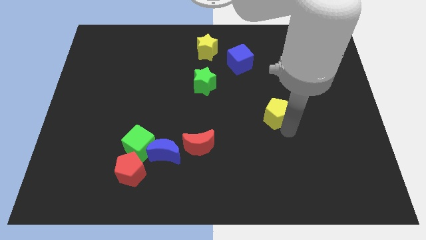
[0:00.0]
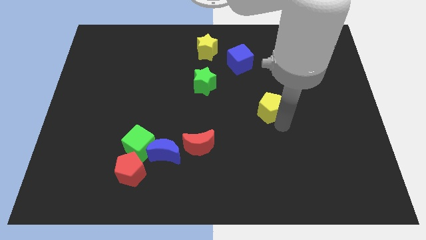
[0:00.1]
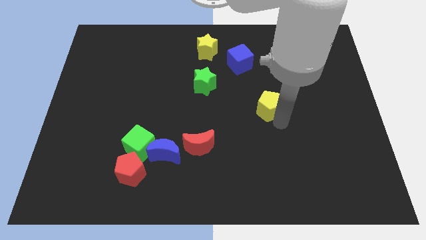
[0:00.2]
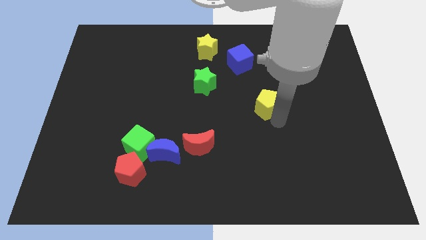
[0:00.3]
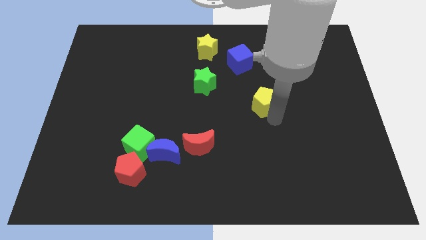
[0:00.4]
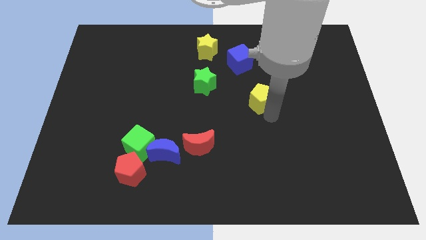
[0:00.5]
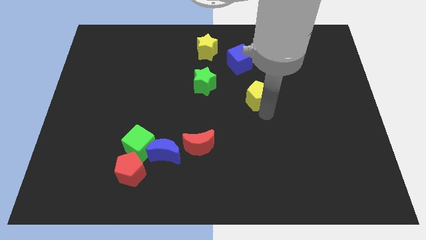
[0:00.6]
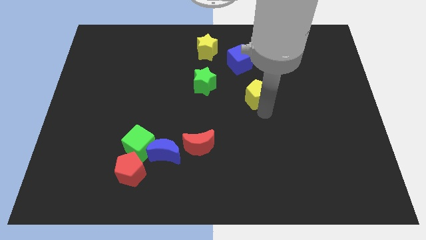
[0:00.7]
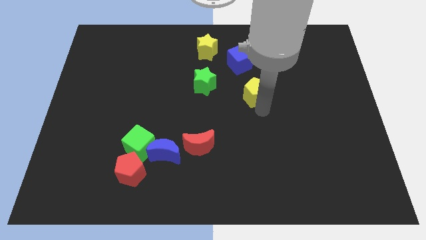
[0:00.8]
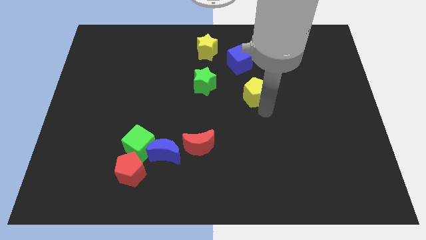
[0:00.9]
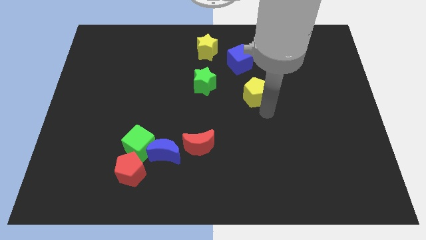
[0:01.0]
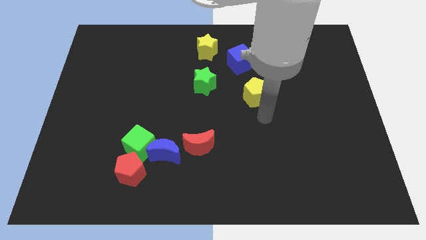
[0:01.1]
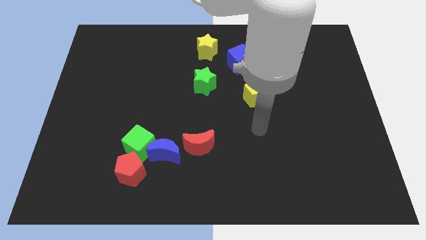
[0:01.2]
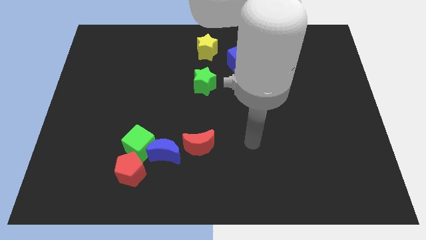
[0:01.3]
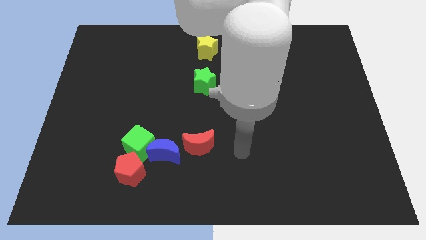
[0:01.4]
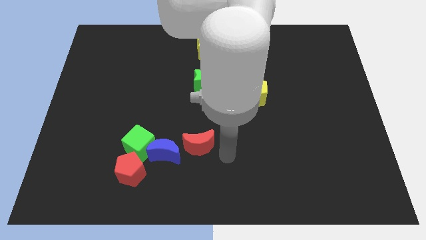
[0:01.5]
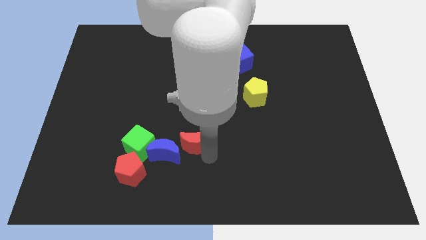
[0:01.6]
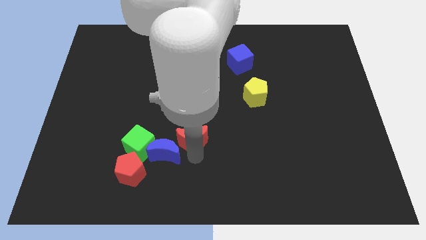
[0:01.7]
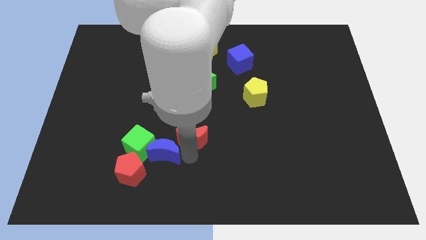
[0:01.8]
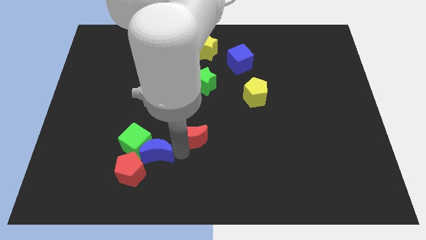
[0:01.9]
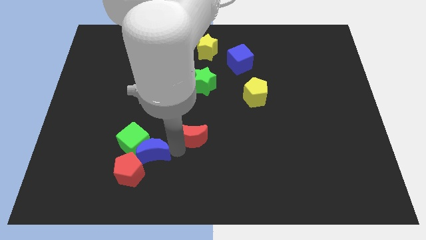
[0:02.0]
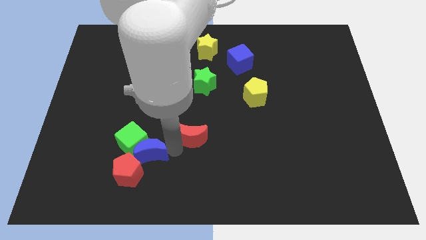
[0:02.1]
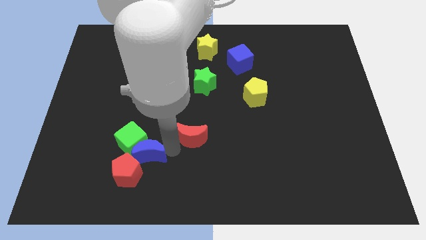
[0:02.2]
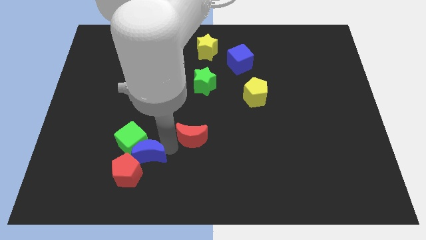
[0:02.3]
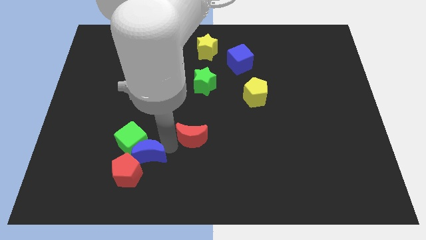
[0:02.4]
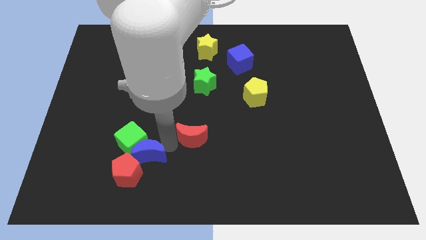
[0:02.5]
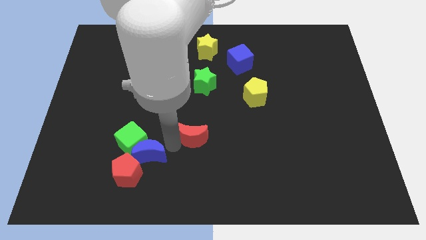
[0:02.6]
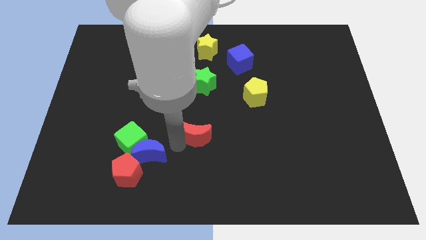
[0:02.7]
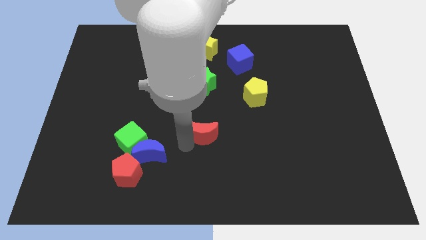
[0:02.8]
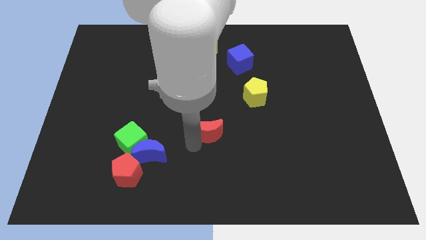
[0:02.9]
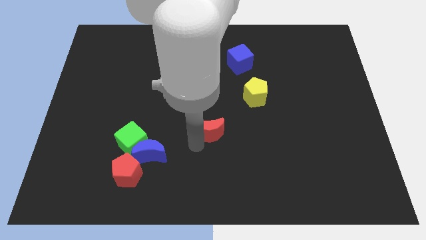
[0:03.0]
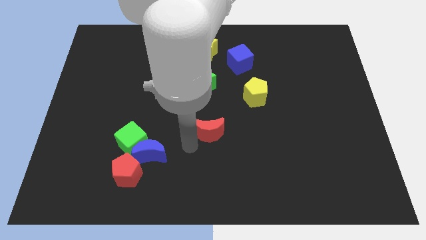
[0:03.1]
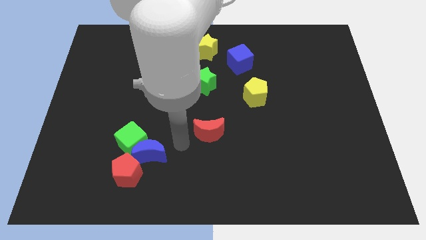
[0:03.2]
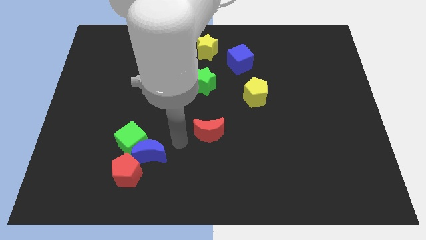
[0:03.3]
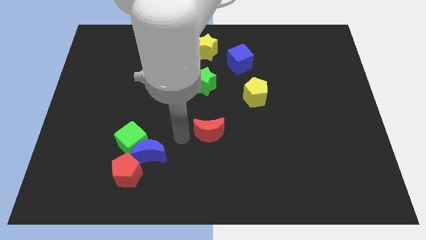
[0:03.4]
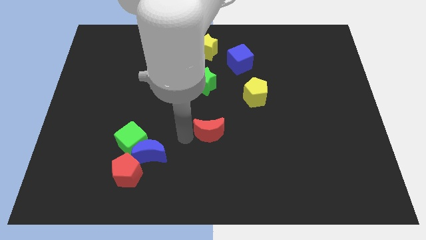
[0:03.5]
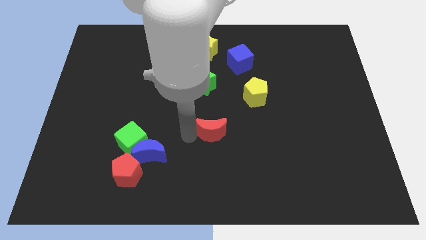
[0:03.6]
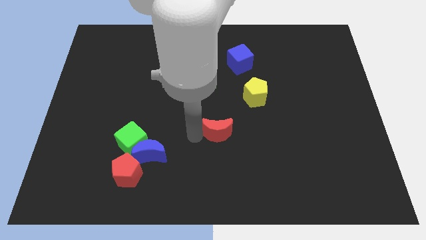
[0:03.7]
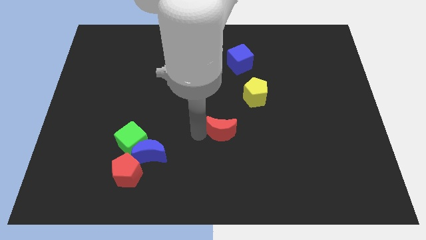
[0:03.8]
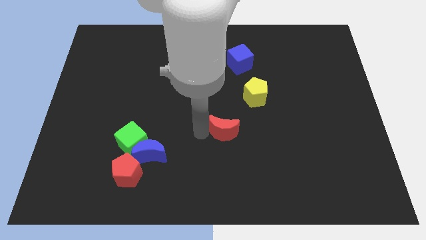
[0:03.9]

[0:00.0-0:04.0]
push red crescent to the center

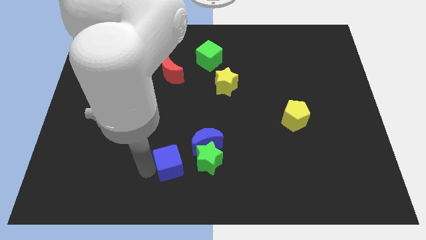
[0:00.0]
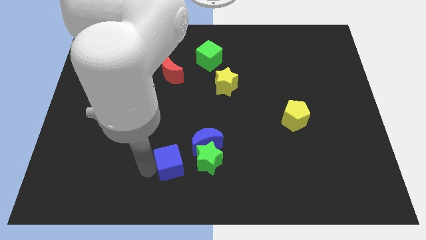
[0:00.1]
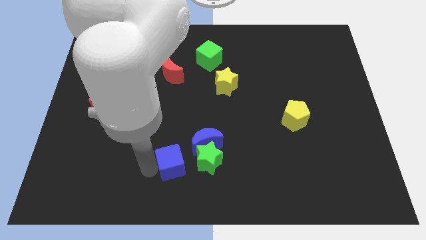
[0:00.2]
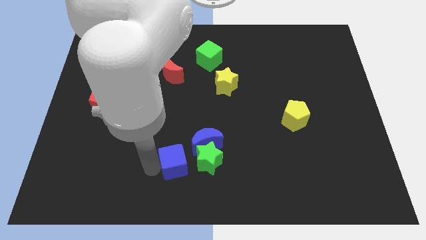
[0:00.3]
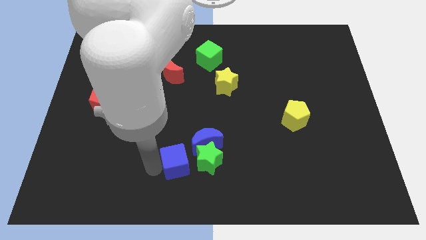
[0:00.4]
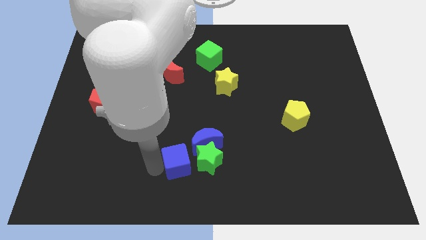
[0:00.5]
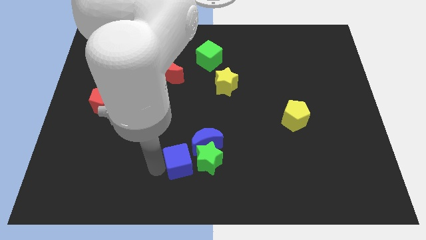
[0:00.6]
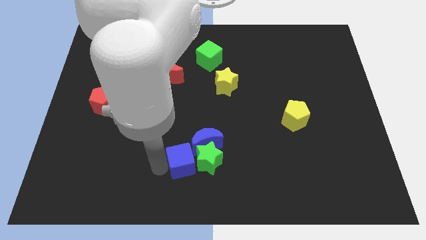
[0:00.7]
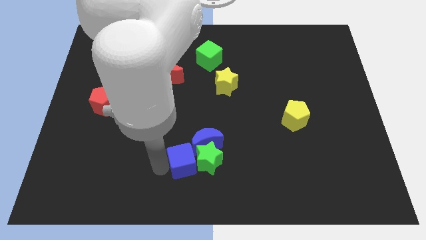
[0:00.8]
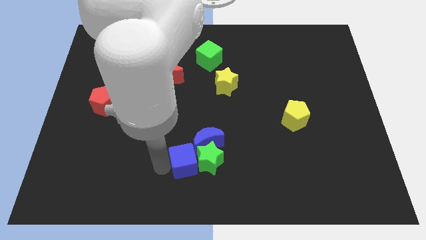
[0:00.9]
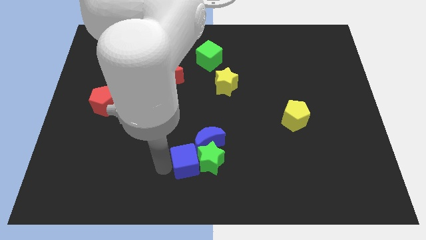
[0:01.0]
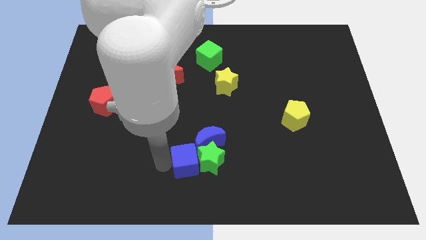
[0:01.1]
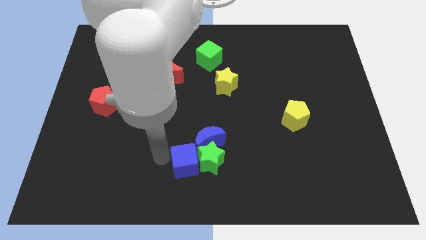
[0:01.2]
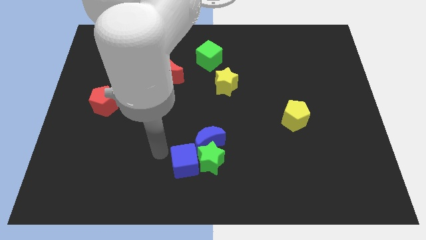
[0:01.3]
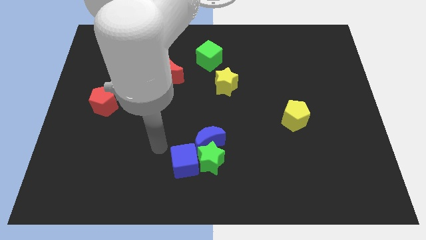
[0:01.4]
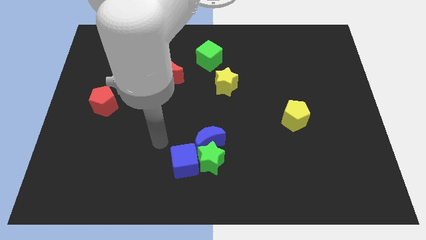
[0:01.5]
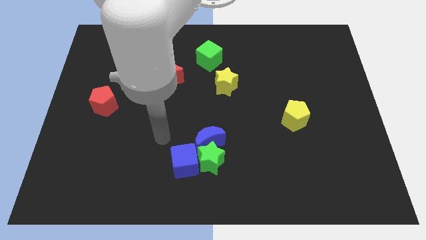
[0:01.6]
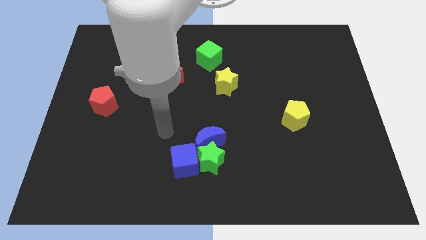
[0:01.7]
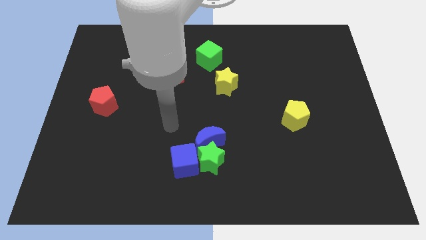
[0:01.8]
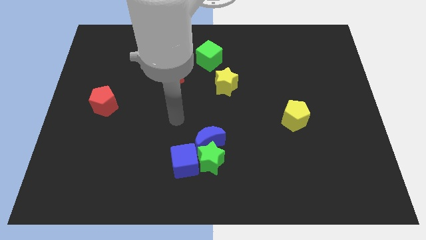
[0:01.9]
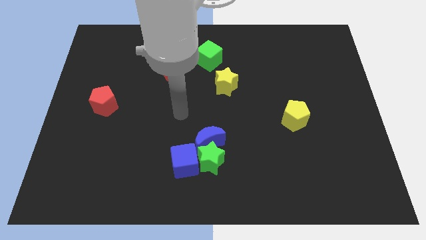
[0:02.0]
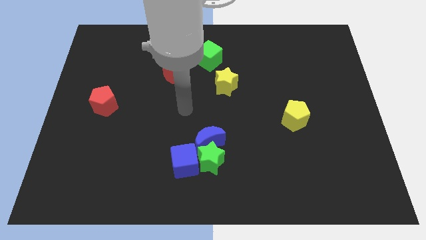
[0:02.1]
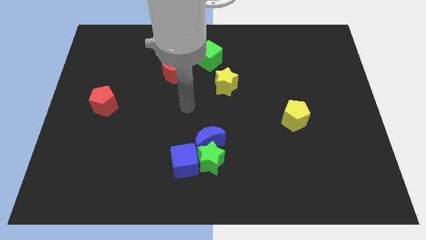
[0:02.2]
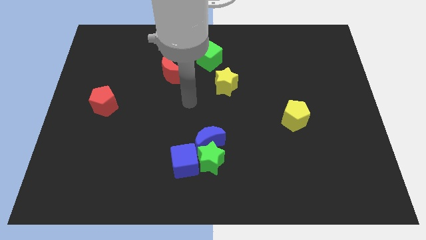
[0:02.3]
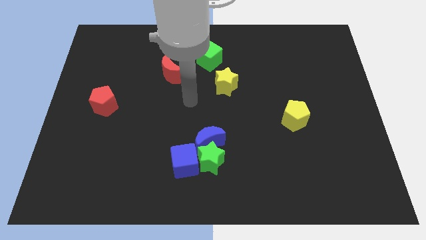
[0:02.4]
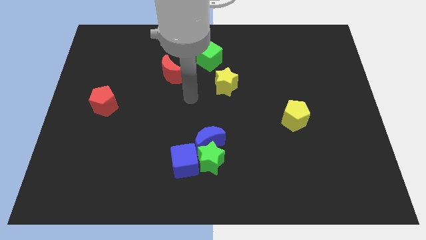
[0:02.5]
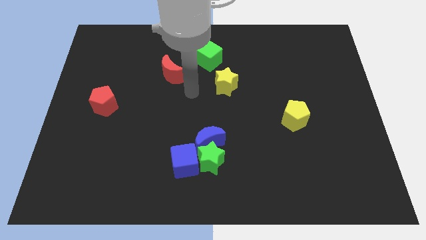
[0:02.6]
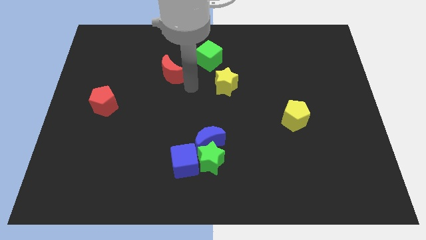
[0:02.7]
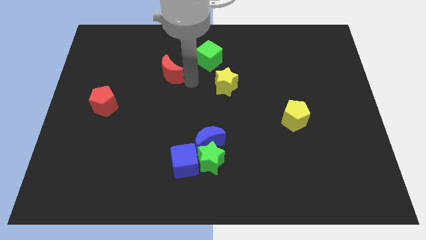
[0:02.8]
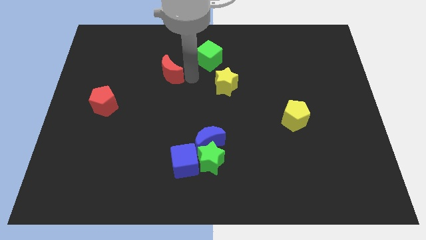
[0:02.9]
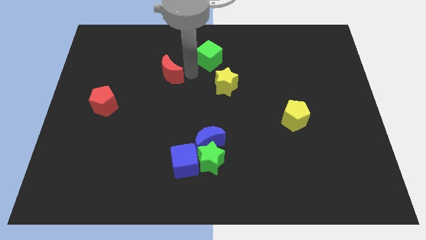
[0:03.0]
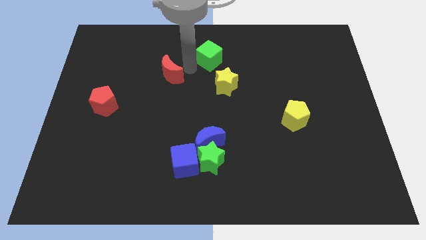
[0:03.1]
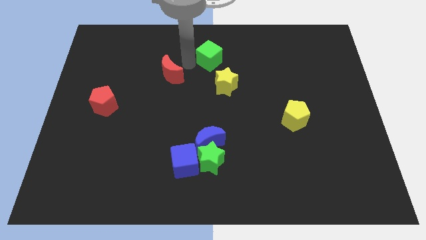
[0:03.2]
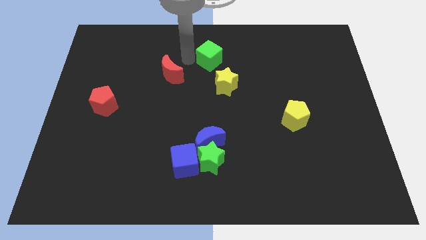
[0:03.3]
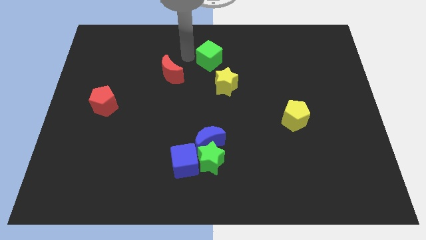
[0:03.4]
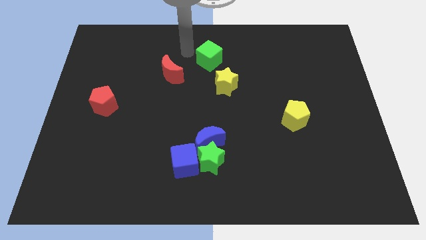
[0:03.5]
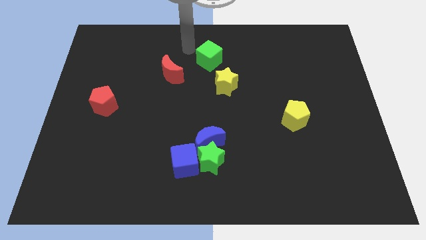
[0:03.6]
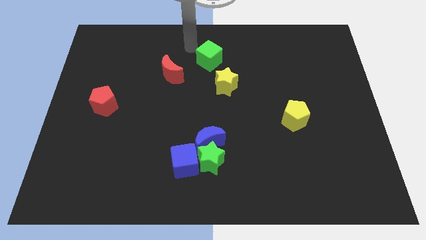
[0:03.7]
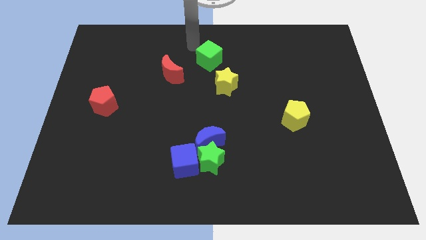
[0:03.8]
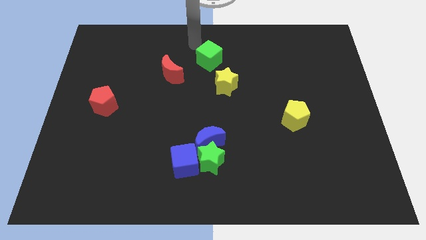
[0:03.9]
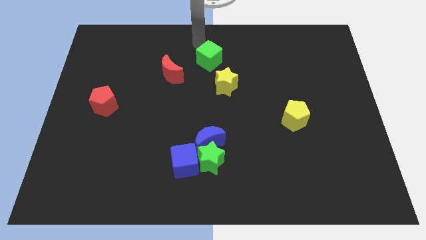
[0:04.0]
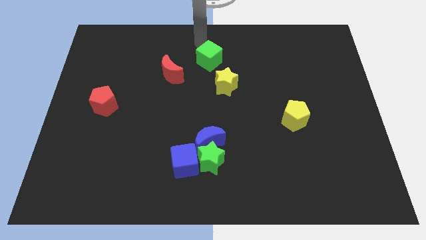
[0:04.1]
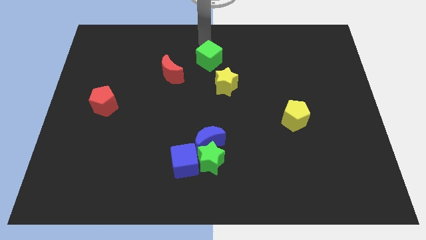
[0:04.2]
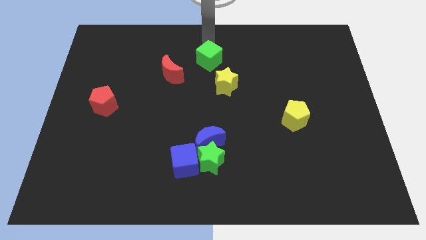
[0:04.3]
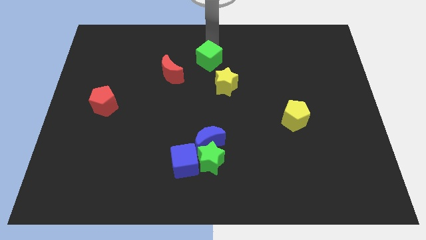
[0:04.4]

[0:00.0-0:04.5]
place the arm above the green cube

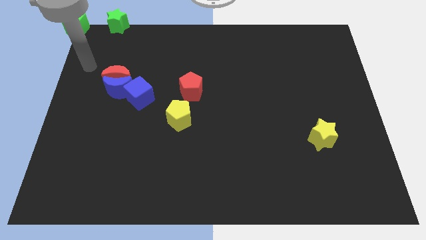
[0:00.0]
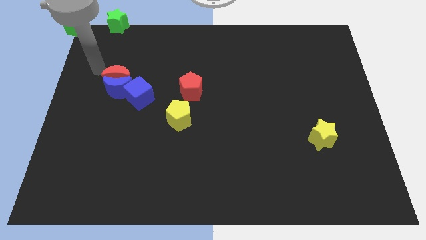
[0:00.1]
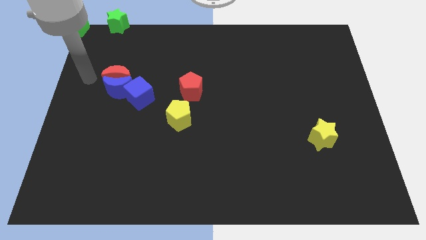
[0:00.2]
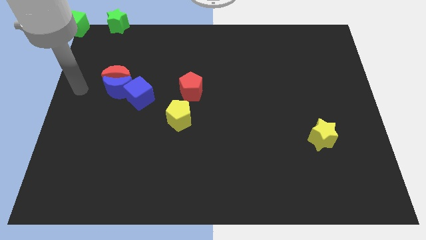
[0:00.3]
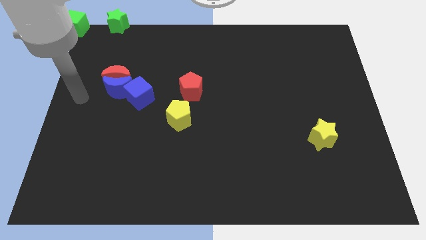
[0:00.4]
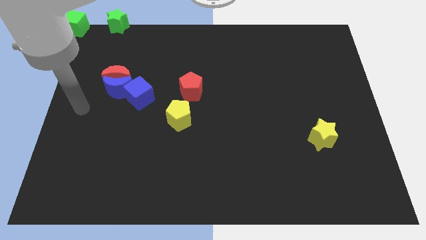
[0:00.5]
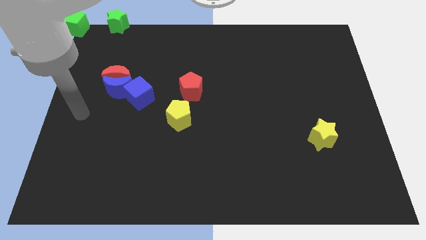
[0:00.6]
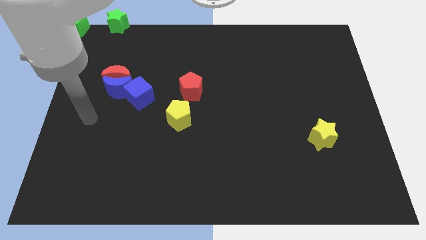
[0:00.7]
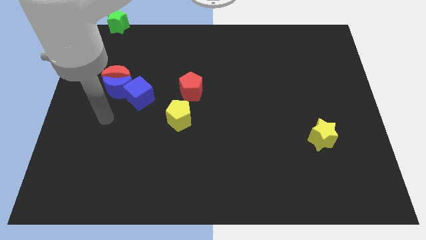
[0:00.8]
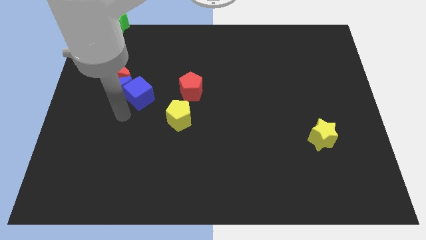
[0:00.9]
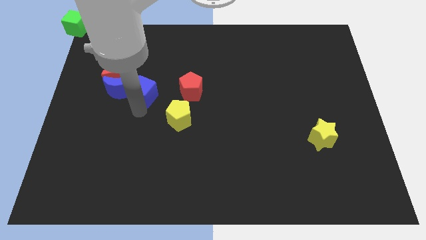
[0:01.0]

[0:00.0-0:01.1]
touch the bottom of blue cube
